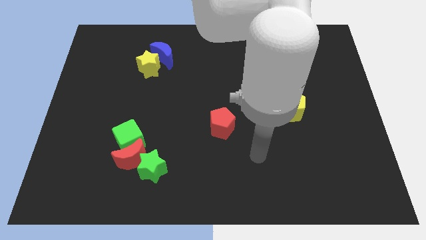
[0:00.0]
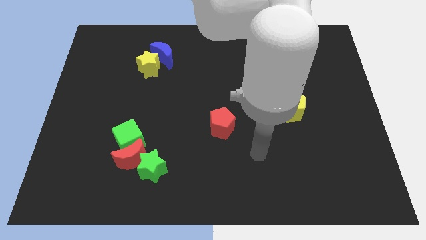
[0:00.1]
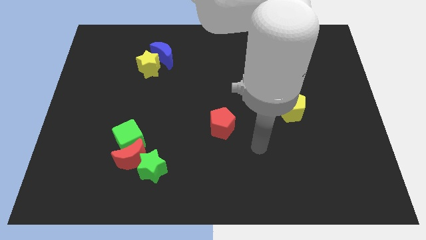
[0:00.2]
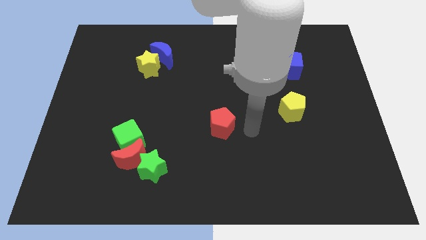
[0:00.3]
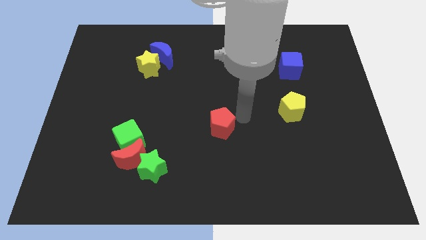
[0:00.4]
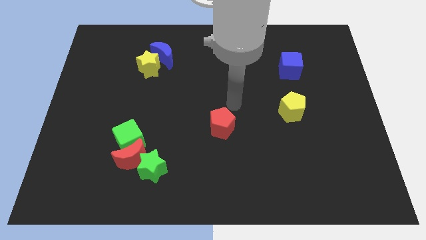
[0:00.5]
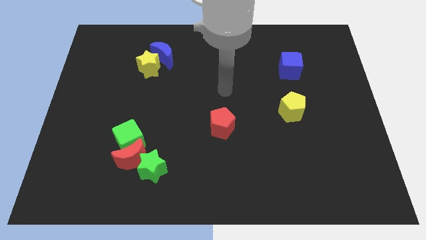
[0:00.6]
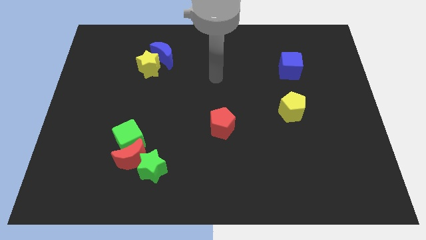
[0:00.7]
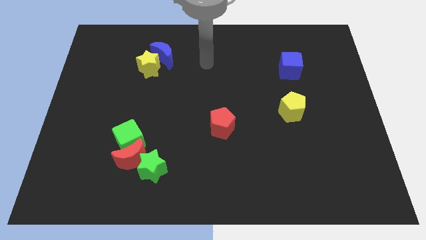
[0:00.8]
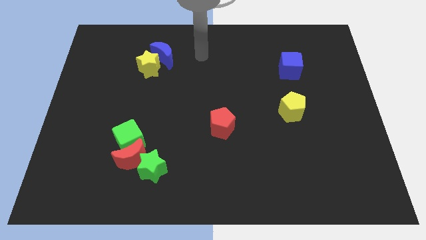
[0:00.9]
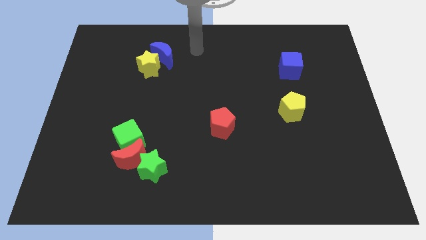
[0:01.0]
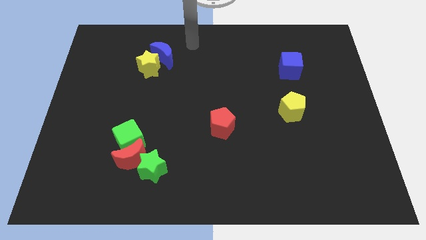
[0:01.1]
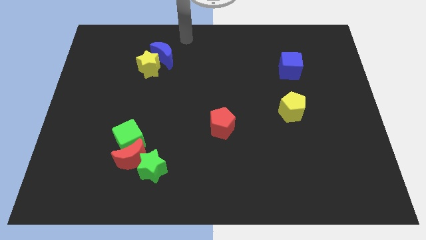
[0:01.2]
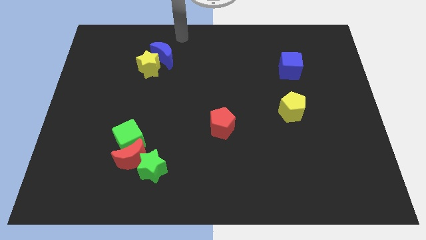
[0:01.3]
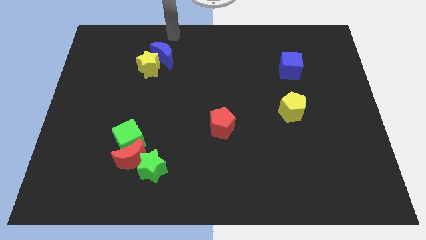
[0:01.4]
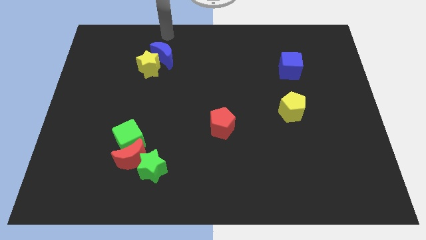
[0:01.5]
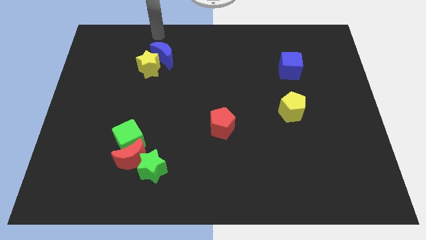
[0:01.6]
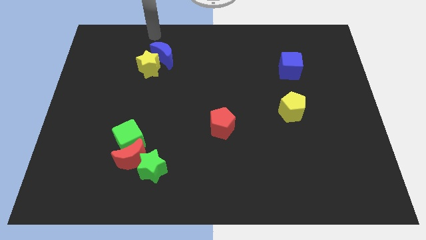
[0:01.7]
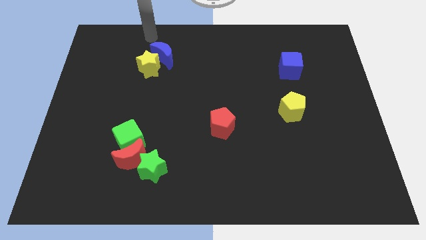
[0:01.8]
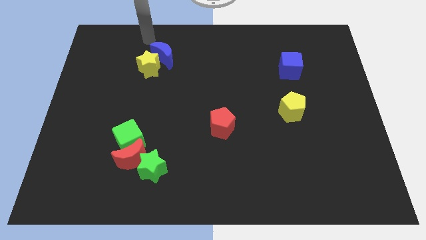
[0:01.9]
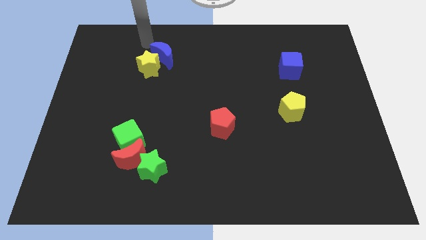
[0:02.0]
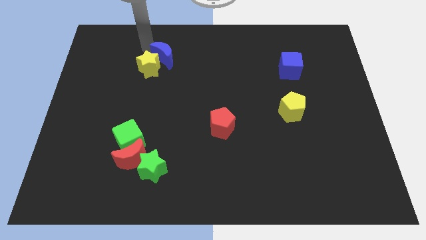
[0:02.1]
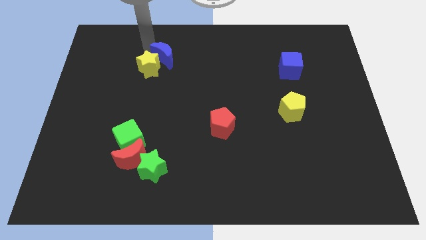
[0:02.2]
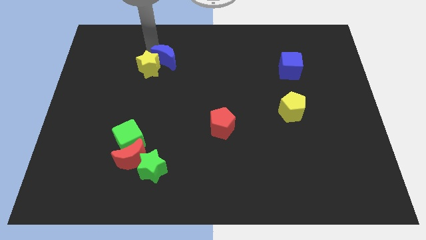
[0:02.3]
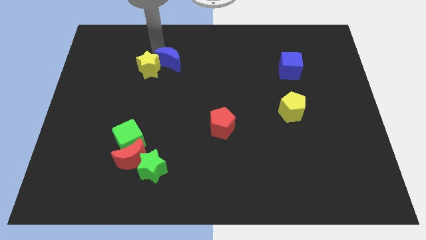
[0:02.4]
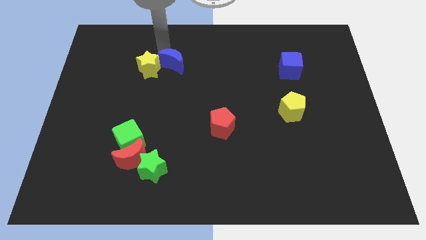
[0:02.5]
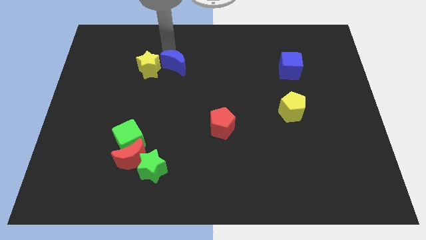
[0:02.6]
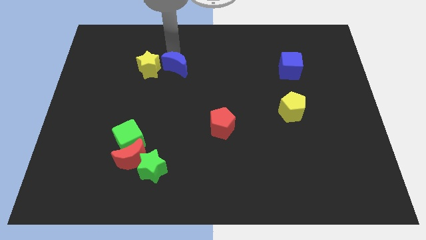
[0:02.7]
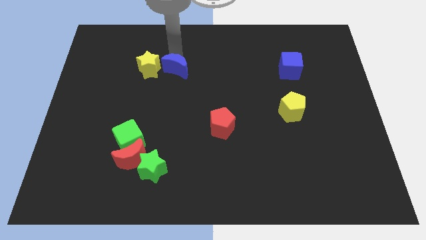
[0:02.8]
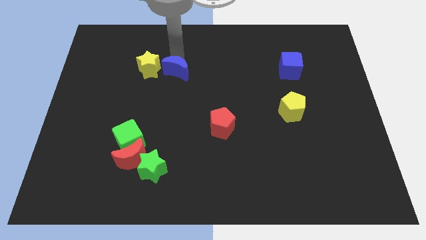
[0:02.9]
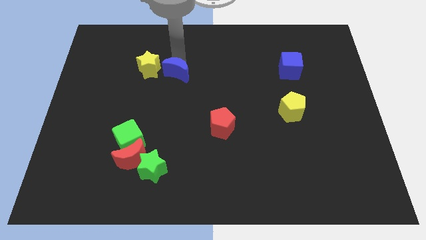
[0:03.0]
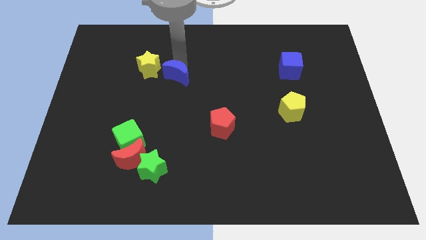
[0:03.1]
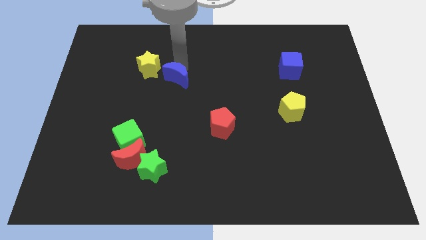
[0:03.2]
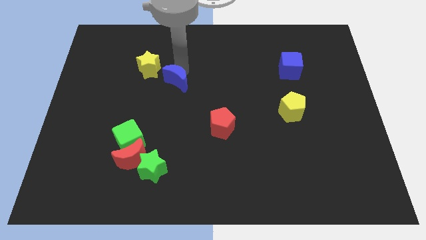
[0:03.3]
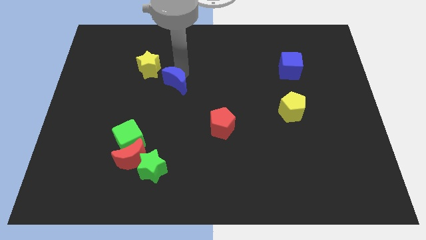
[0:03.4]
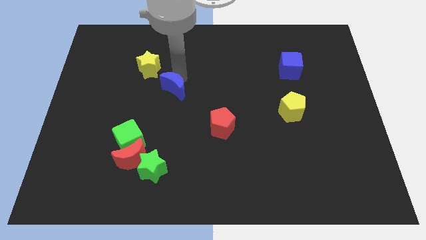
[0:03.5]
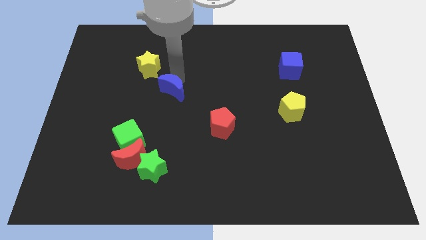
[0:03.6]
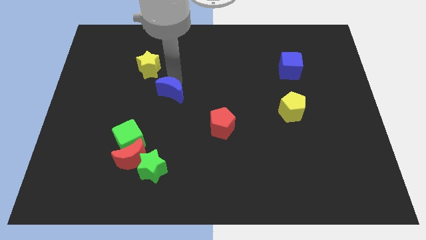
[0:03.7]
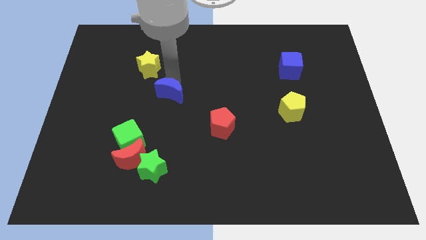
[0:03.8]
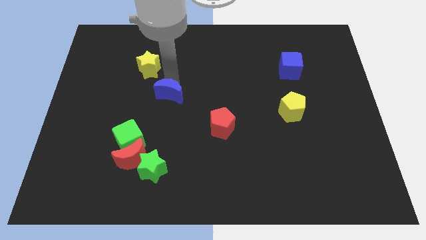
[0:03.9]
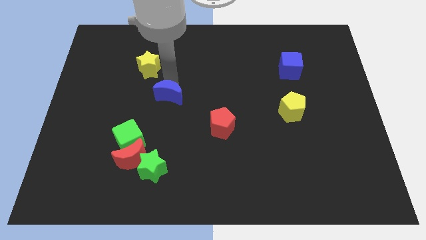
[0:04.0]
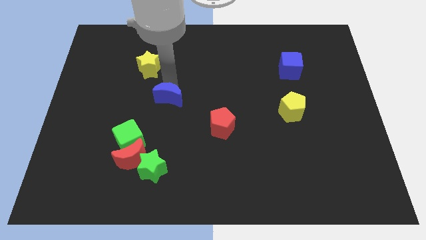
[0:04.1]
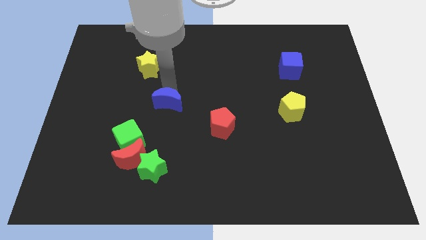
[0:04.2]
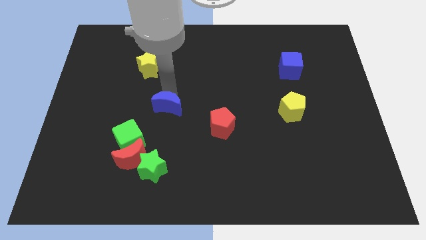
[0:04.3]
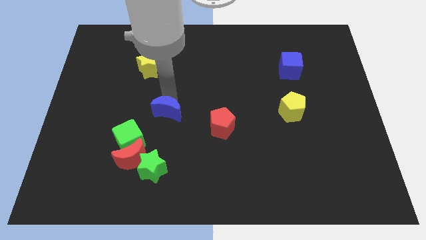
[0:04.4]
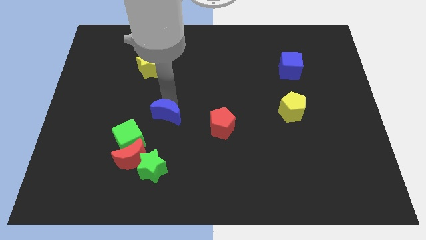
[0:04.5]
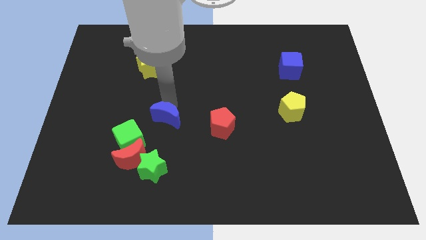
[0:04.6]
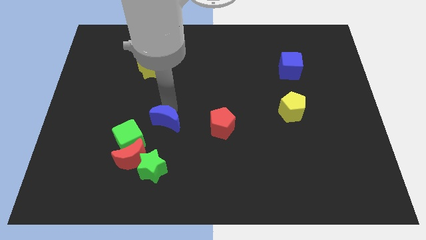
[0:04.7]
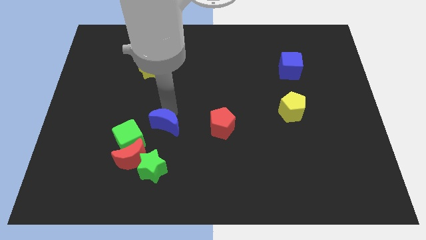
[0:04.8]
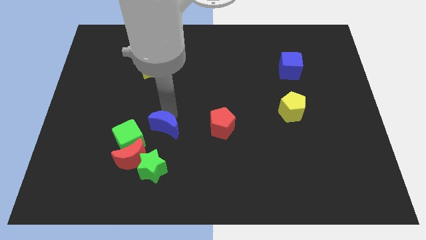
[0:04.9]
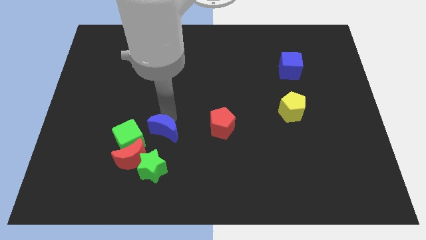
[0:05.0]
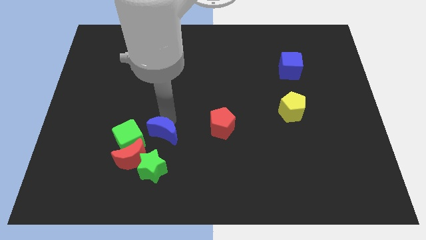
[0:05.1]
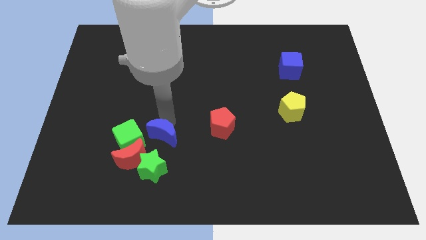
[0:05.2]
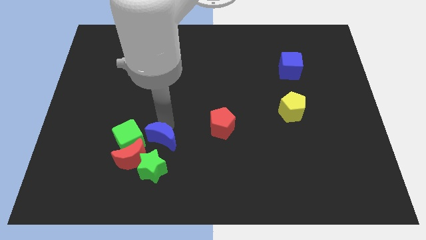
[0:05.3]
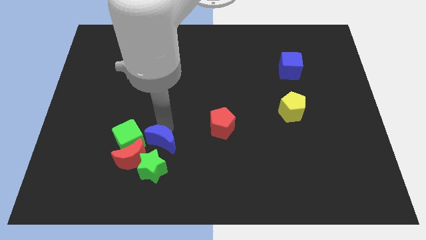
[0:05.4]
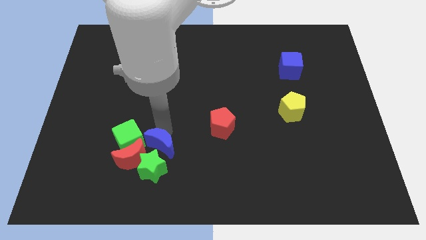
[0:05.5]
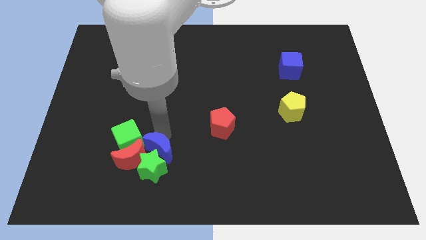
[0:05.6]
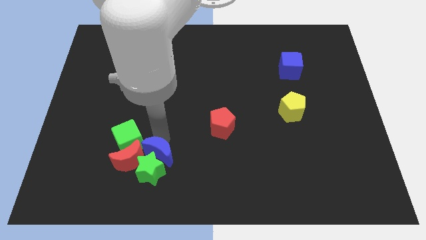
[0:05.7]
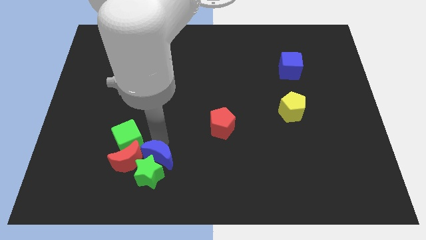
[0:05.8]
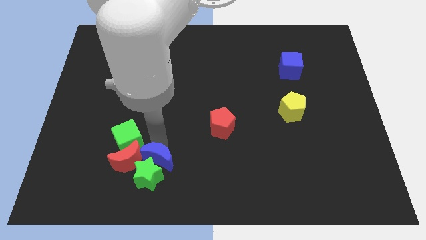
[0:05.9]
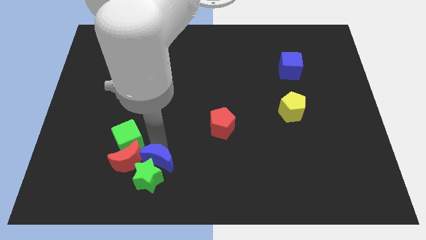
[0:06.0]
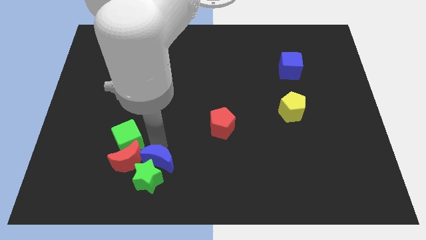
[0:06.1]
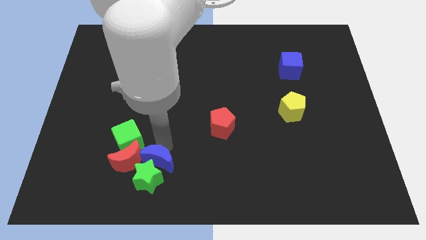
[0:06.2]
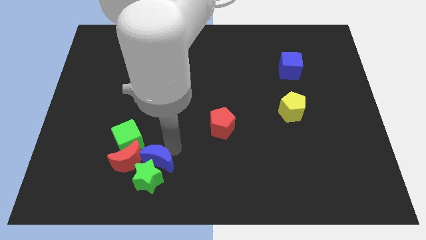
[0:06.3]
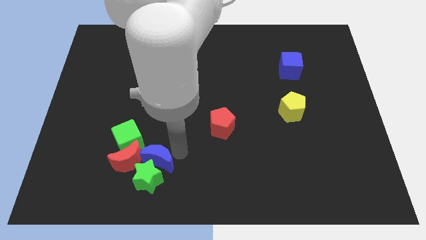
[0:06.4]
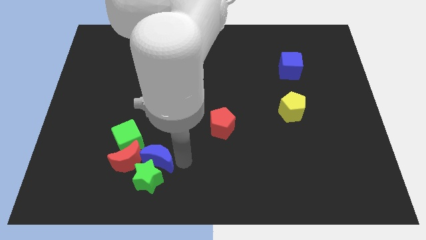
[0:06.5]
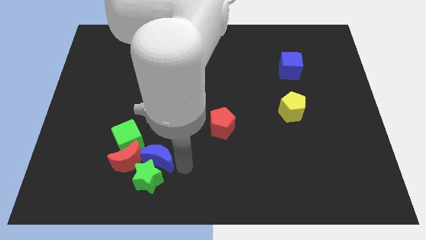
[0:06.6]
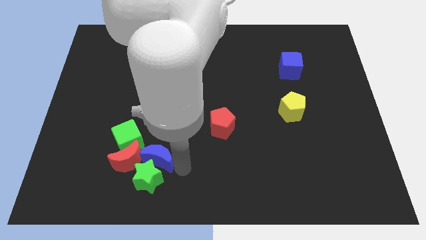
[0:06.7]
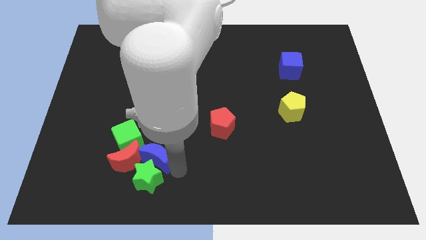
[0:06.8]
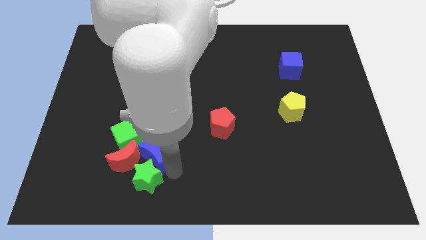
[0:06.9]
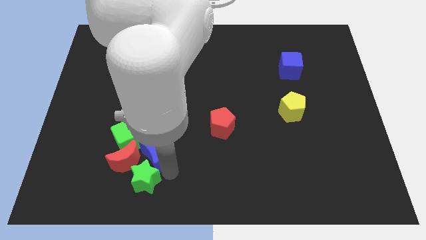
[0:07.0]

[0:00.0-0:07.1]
move the blue moon towards the red moon

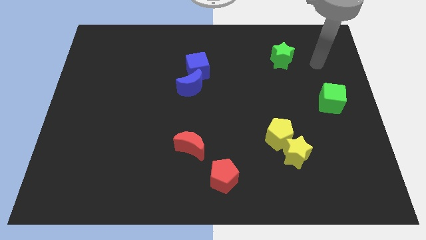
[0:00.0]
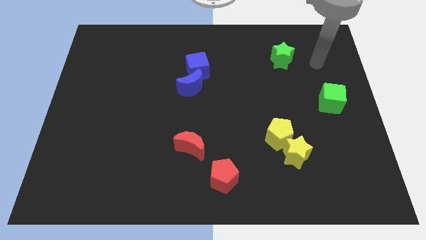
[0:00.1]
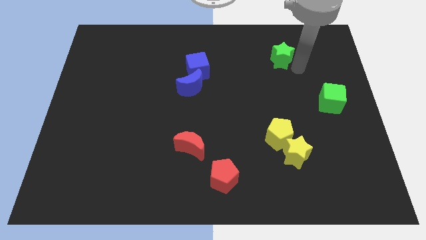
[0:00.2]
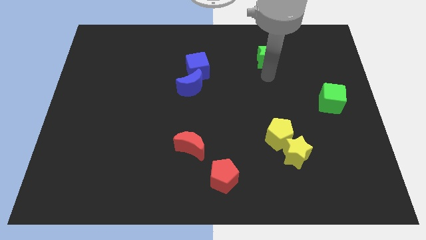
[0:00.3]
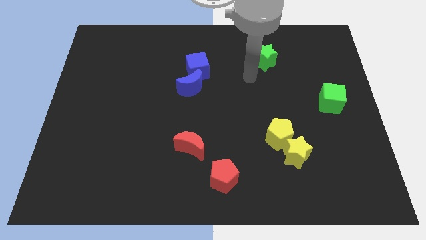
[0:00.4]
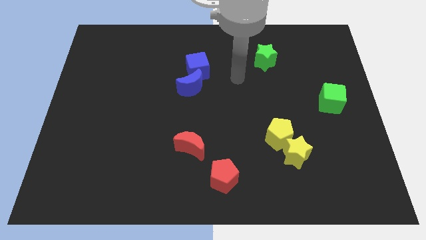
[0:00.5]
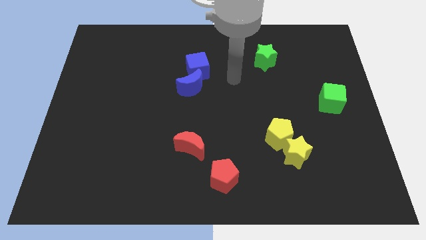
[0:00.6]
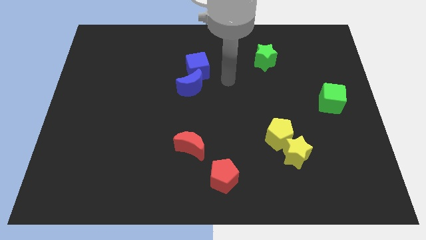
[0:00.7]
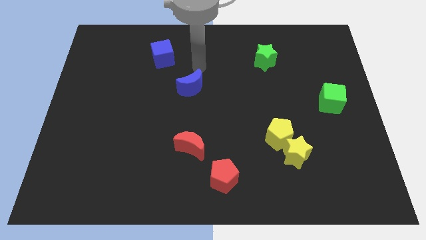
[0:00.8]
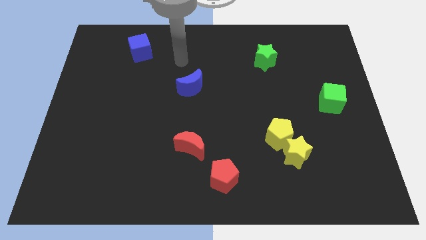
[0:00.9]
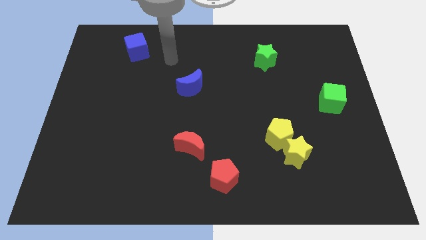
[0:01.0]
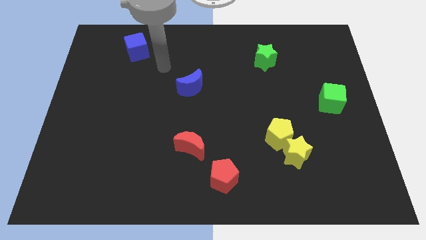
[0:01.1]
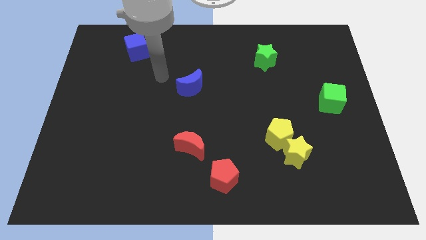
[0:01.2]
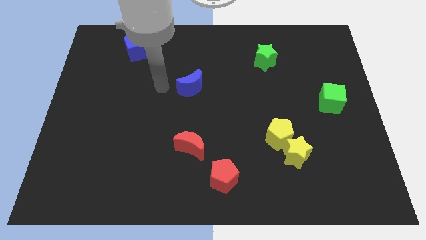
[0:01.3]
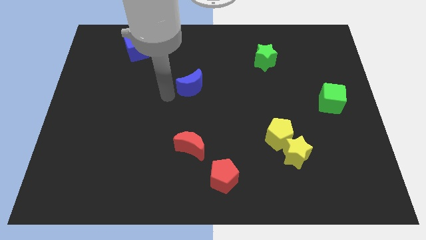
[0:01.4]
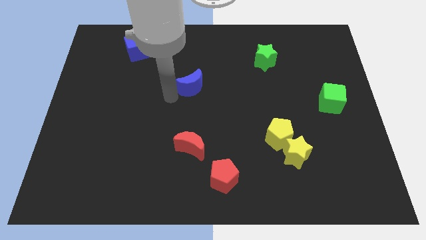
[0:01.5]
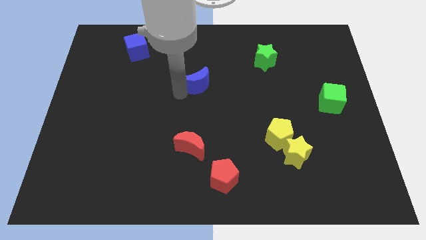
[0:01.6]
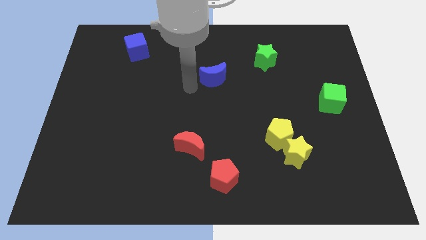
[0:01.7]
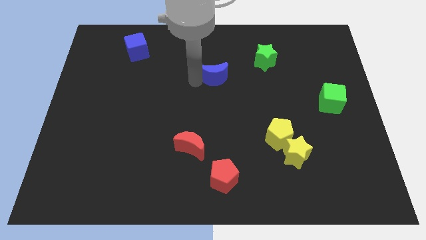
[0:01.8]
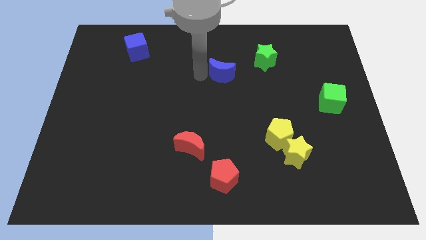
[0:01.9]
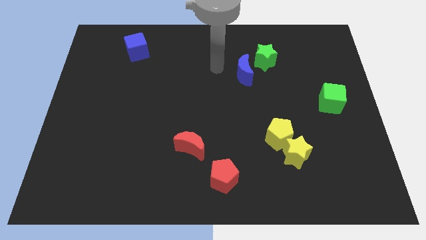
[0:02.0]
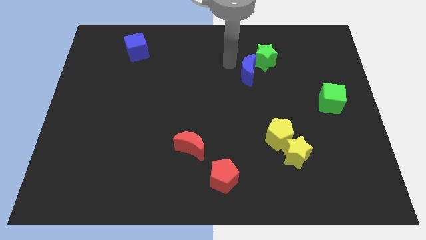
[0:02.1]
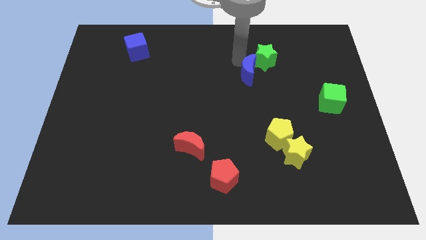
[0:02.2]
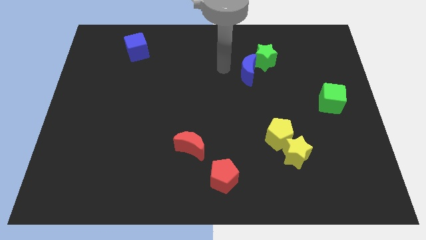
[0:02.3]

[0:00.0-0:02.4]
push the blue moon to the green star
